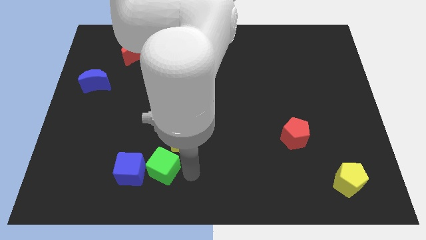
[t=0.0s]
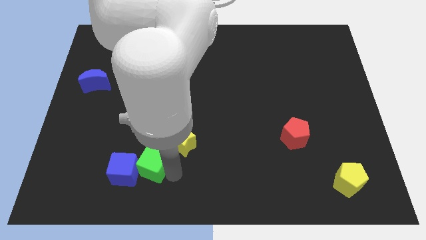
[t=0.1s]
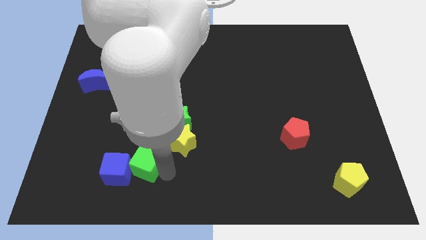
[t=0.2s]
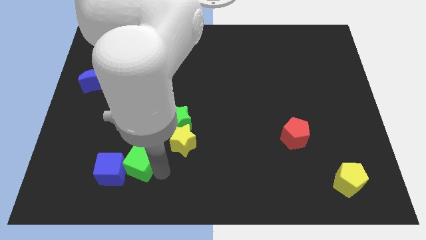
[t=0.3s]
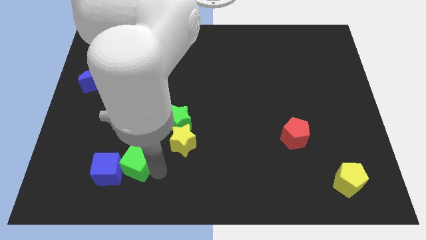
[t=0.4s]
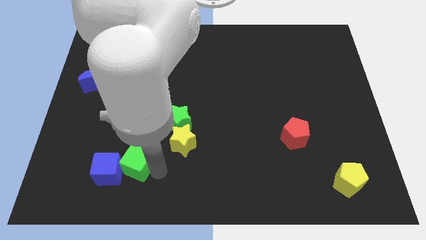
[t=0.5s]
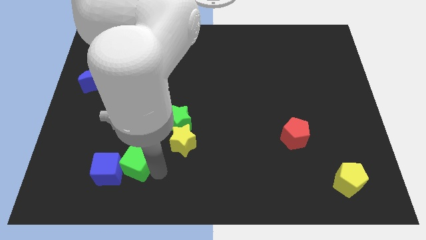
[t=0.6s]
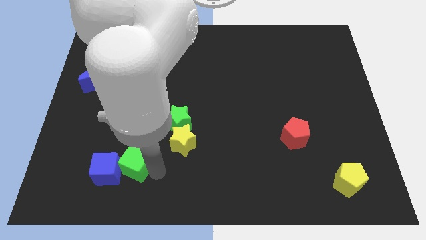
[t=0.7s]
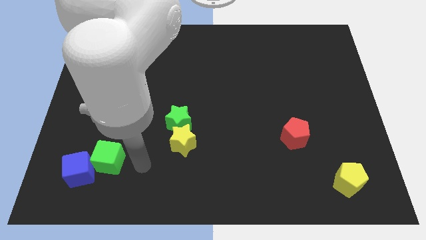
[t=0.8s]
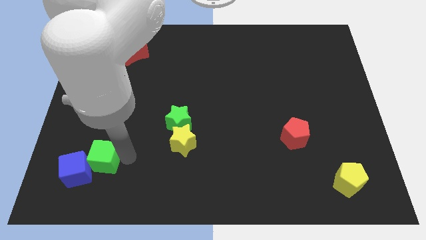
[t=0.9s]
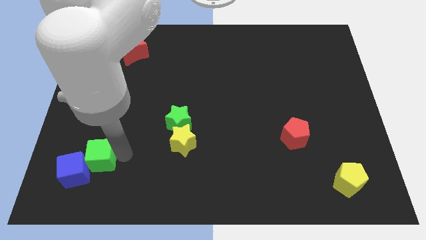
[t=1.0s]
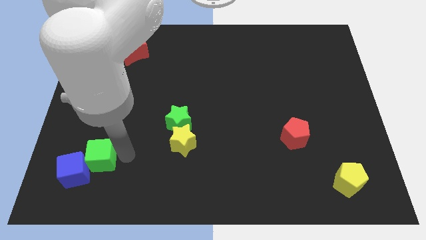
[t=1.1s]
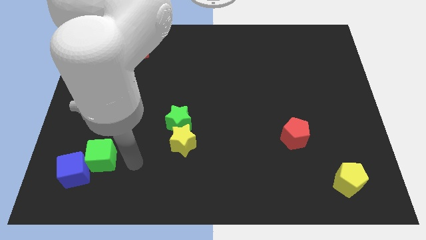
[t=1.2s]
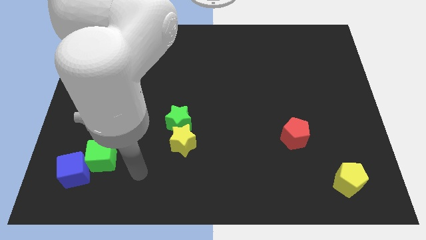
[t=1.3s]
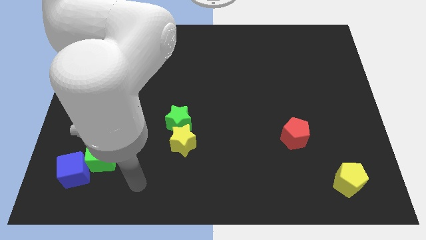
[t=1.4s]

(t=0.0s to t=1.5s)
push the cubes towards bottom left side

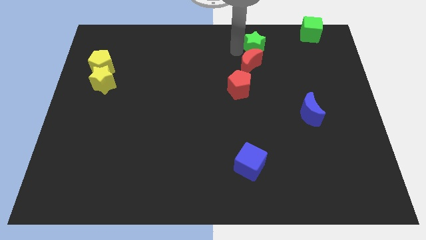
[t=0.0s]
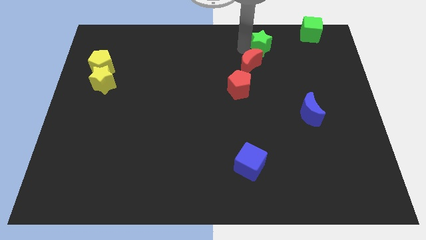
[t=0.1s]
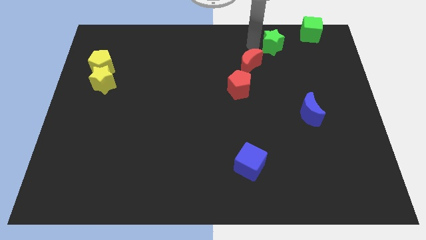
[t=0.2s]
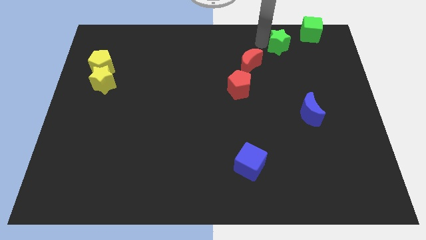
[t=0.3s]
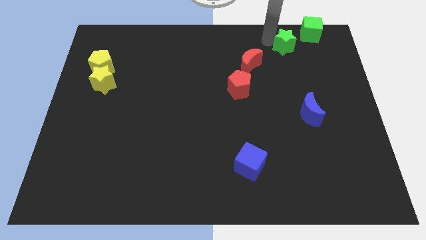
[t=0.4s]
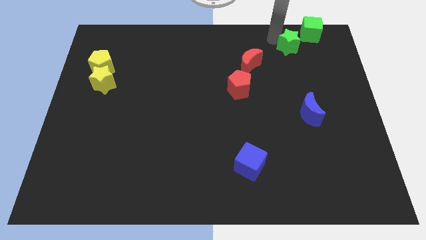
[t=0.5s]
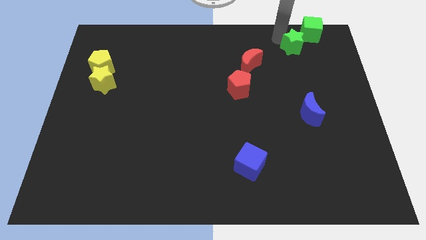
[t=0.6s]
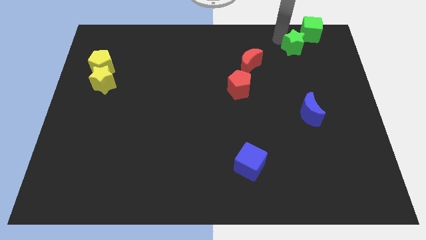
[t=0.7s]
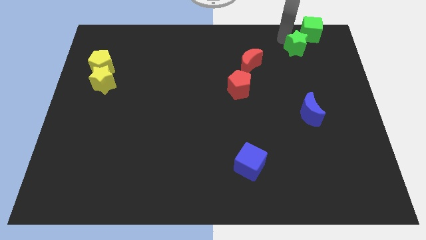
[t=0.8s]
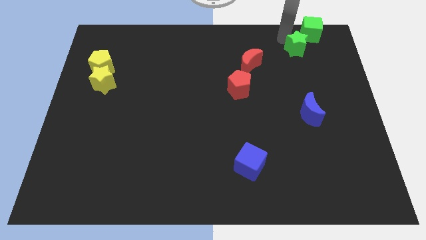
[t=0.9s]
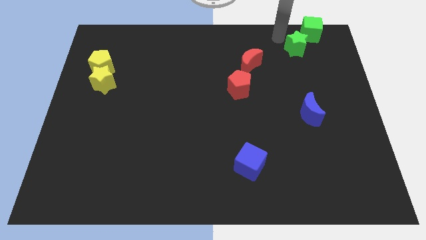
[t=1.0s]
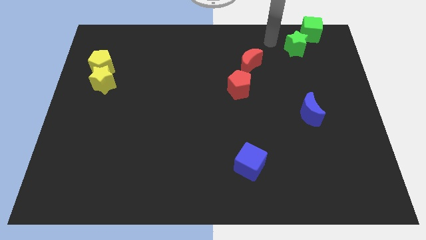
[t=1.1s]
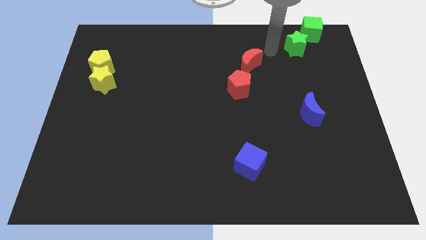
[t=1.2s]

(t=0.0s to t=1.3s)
move the green star to the bottom left of the green cube

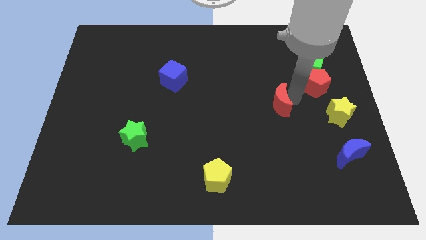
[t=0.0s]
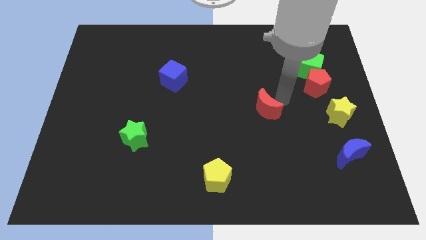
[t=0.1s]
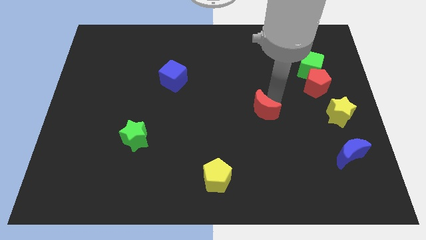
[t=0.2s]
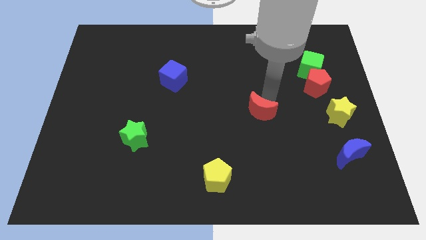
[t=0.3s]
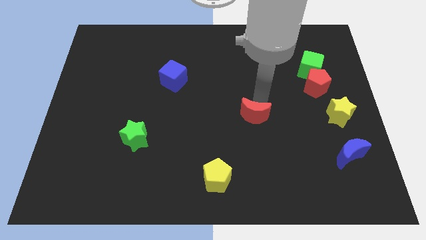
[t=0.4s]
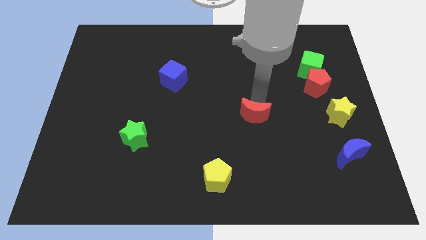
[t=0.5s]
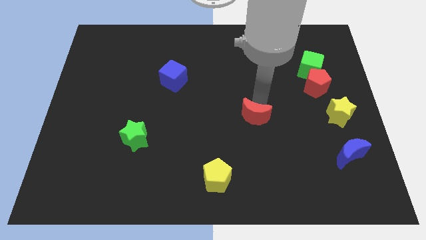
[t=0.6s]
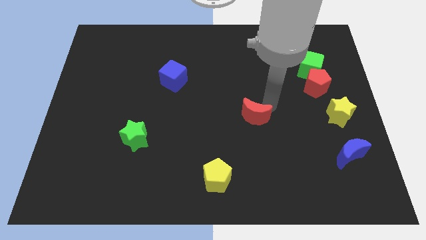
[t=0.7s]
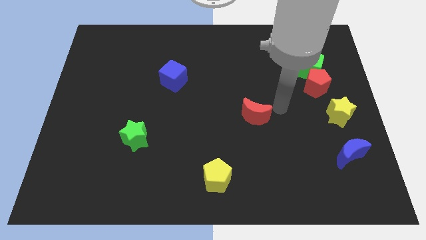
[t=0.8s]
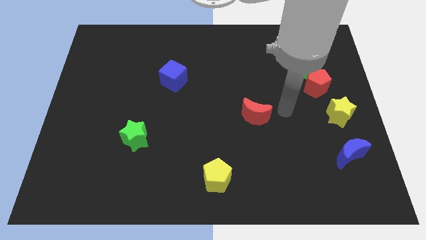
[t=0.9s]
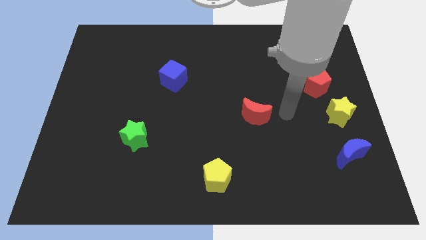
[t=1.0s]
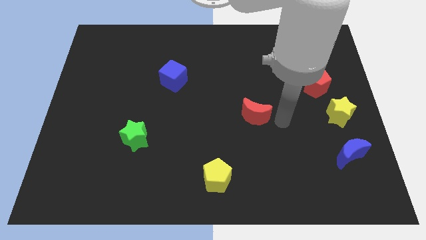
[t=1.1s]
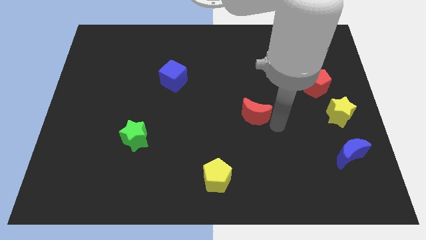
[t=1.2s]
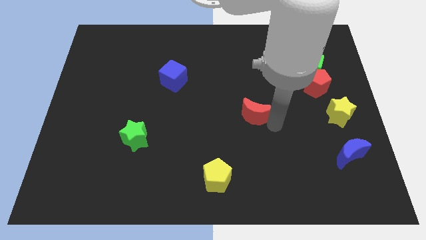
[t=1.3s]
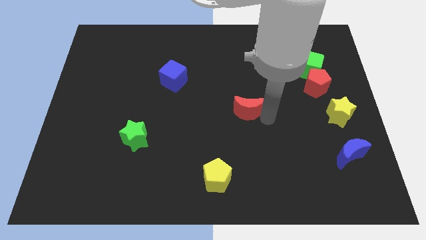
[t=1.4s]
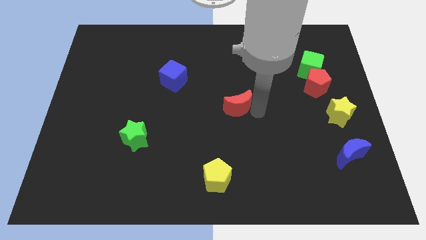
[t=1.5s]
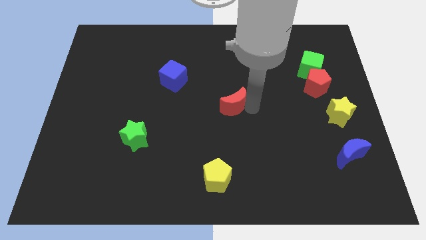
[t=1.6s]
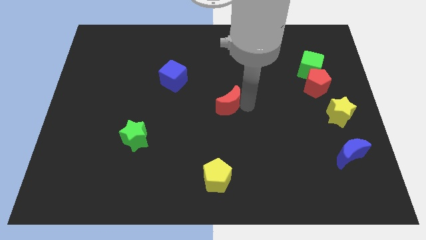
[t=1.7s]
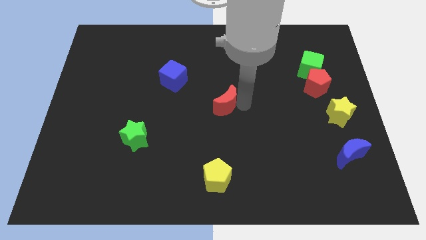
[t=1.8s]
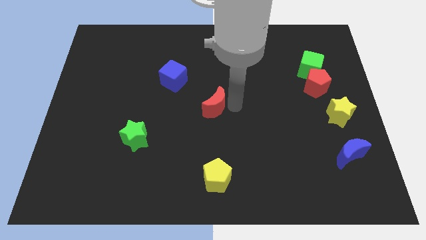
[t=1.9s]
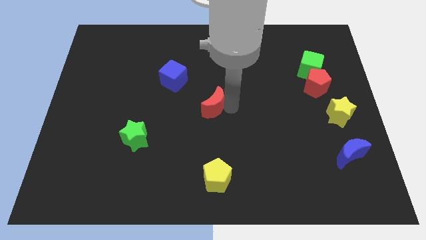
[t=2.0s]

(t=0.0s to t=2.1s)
push the red crescent towards the center

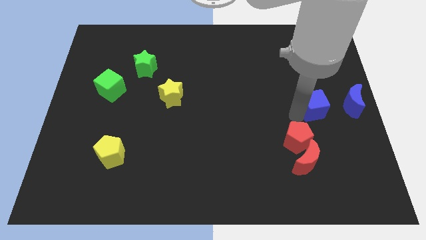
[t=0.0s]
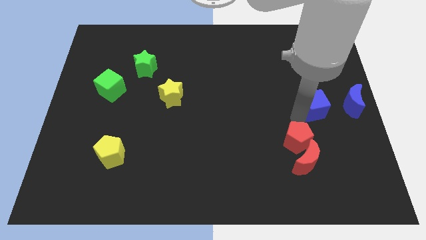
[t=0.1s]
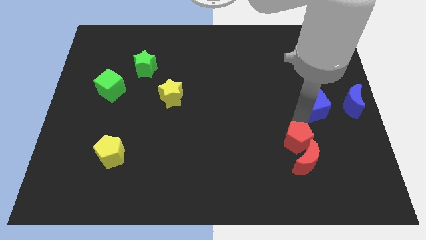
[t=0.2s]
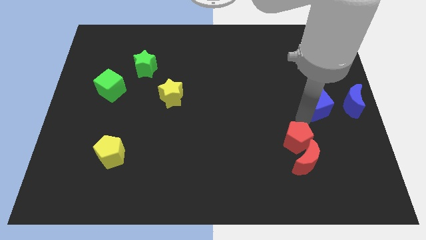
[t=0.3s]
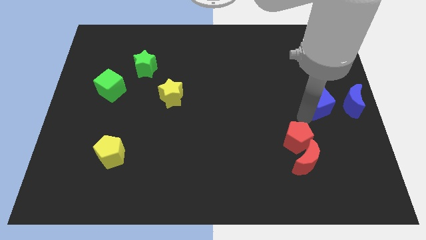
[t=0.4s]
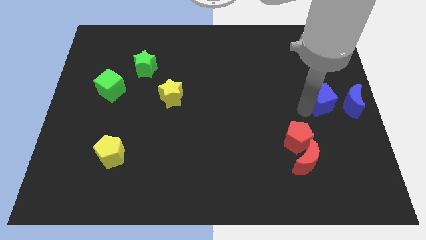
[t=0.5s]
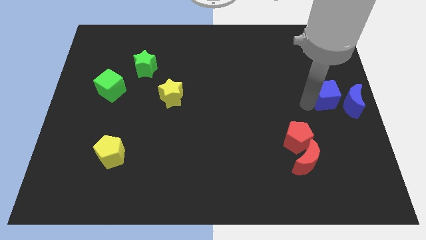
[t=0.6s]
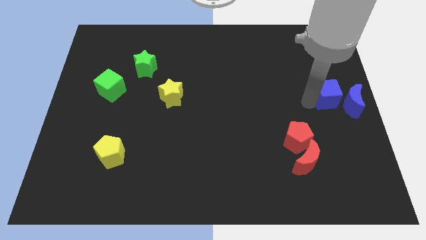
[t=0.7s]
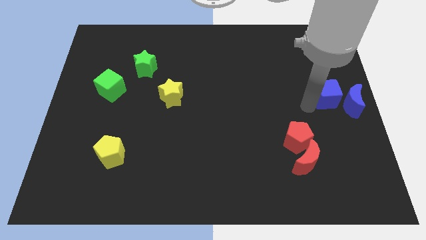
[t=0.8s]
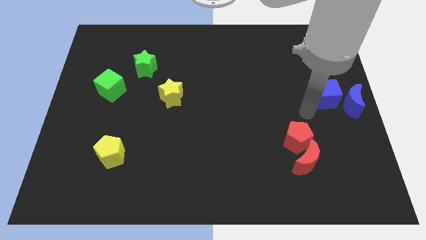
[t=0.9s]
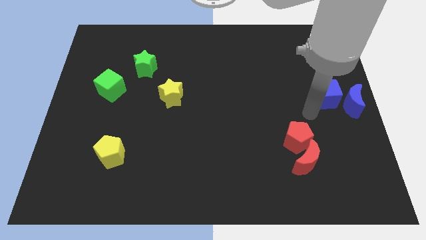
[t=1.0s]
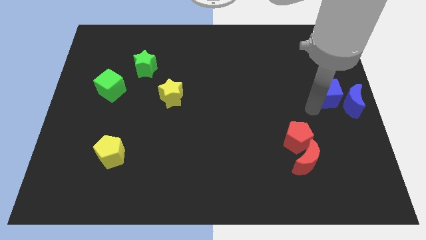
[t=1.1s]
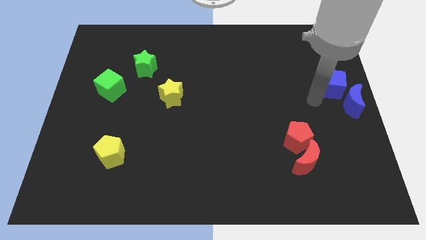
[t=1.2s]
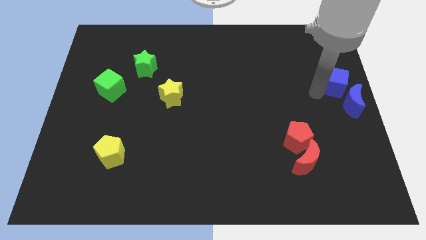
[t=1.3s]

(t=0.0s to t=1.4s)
place the blue cube towards the top left side of the blue crescent

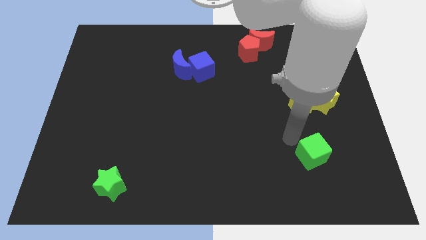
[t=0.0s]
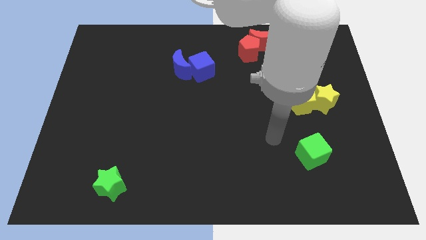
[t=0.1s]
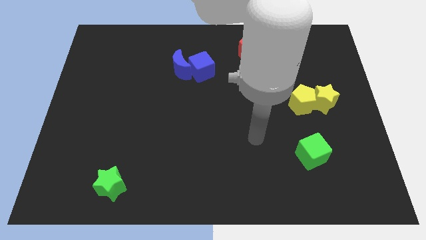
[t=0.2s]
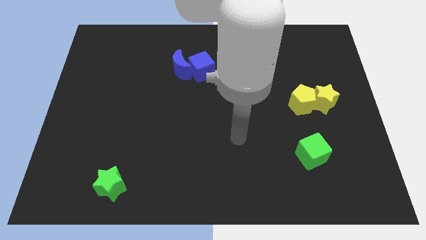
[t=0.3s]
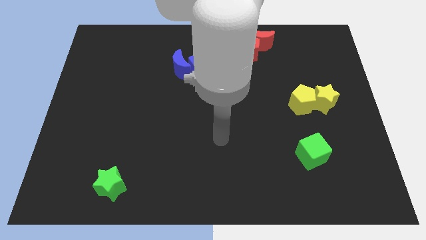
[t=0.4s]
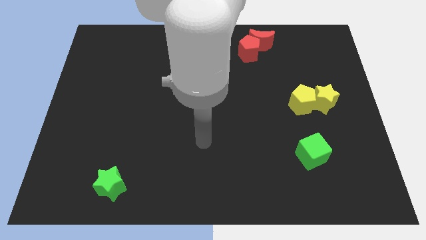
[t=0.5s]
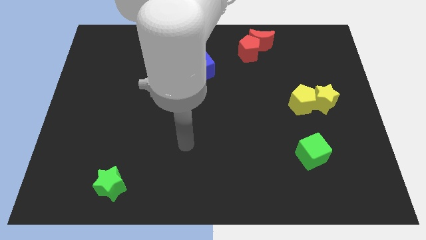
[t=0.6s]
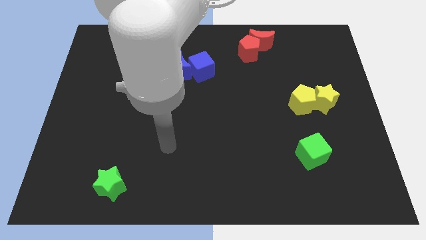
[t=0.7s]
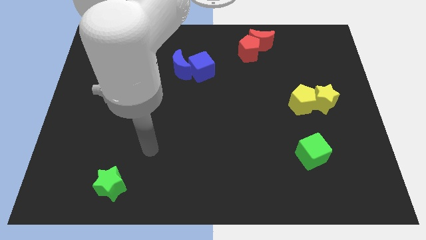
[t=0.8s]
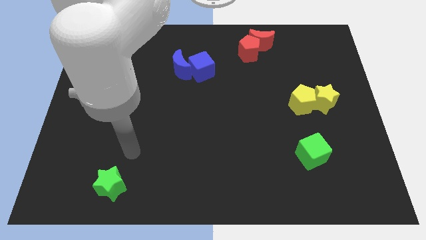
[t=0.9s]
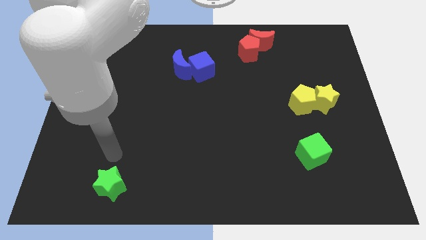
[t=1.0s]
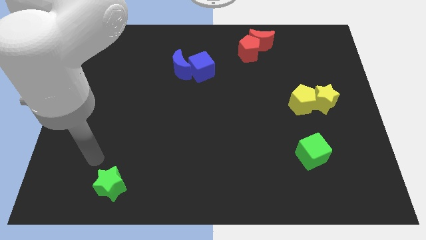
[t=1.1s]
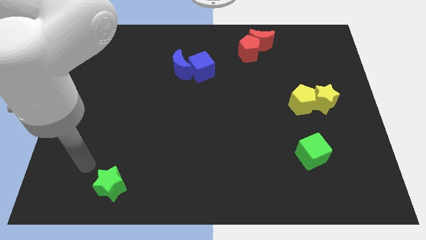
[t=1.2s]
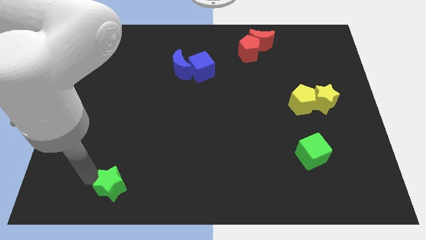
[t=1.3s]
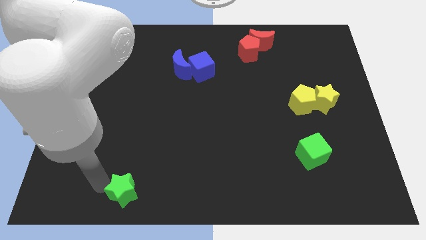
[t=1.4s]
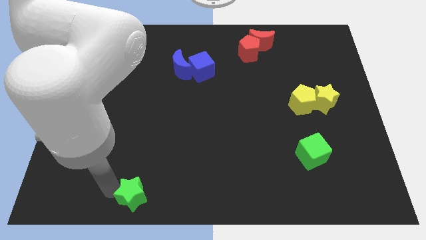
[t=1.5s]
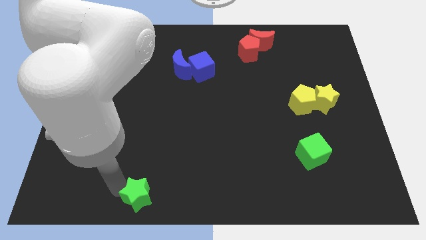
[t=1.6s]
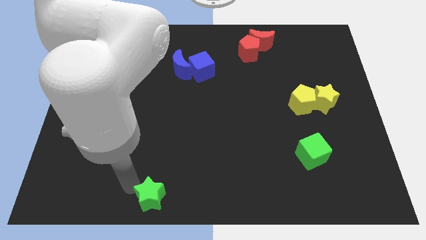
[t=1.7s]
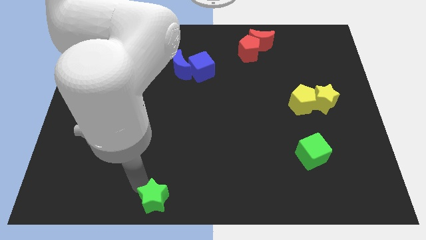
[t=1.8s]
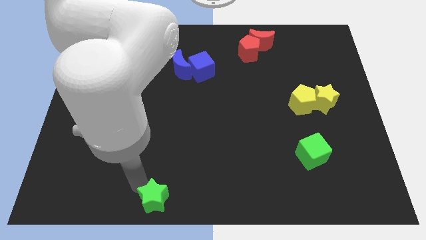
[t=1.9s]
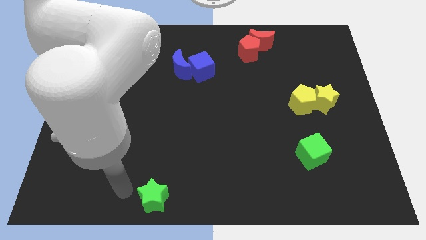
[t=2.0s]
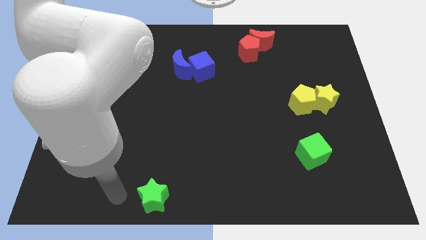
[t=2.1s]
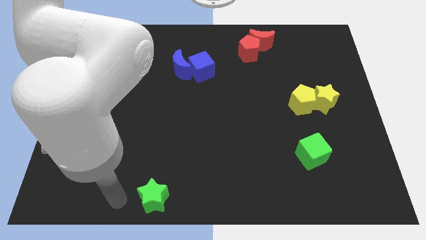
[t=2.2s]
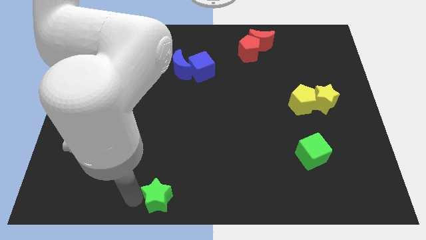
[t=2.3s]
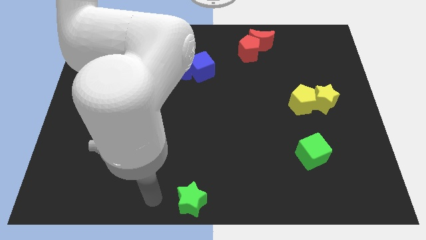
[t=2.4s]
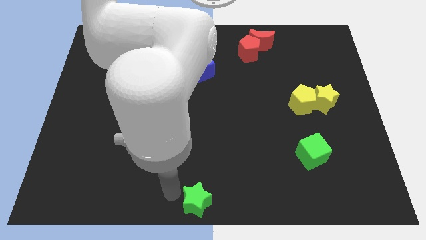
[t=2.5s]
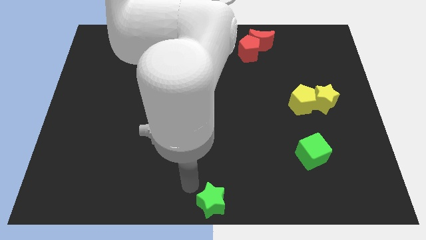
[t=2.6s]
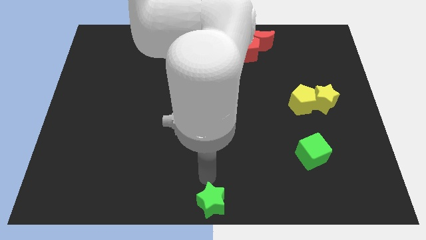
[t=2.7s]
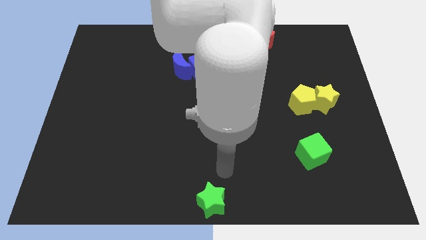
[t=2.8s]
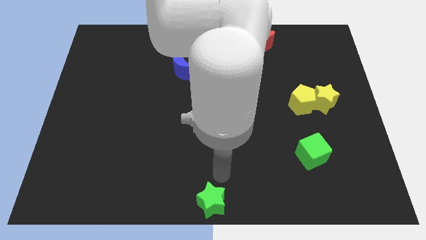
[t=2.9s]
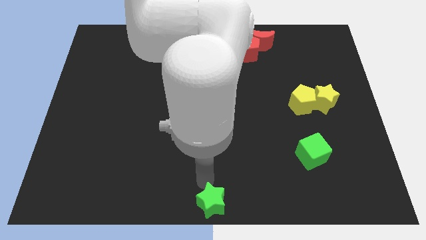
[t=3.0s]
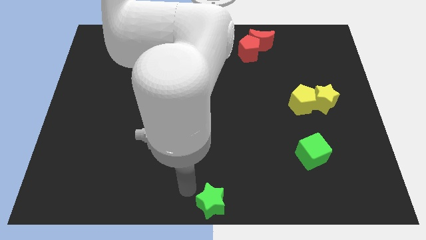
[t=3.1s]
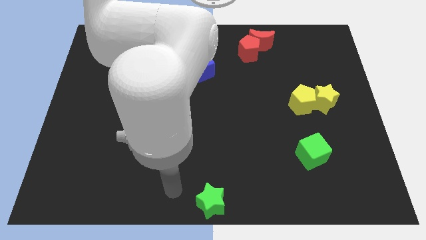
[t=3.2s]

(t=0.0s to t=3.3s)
move the green star to the bottom center
